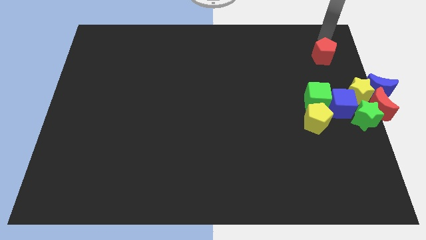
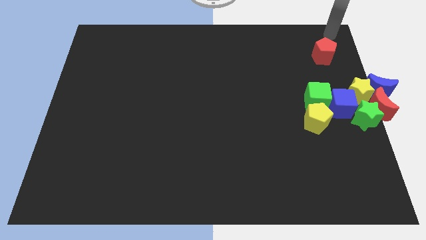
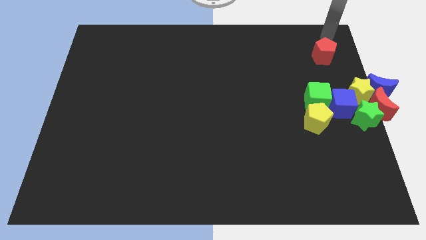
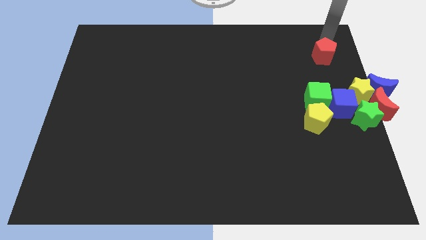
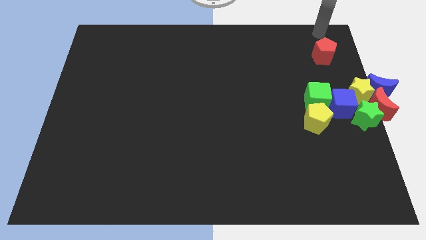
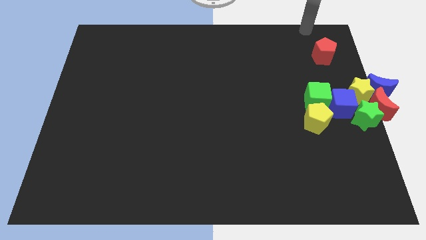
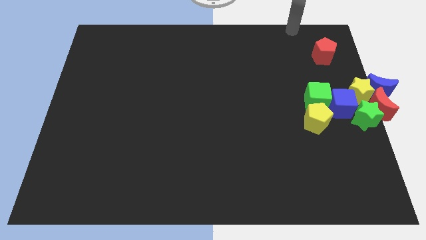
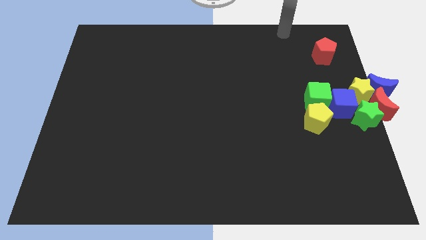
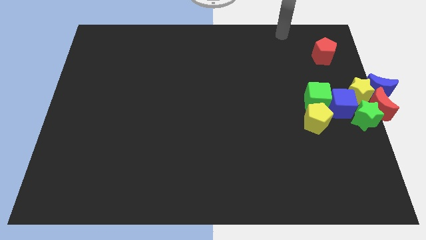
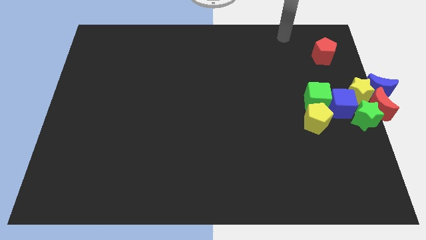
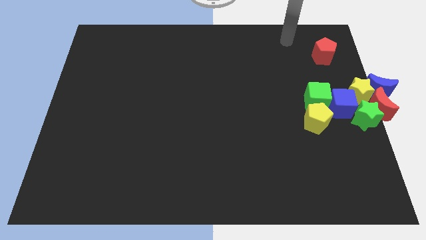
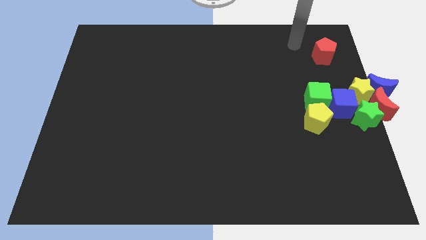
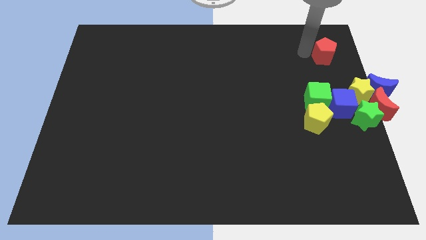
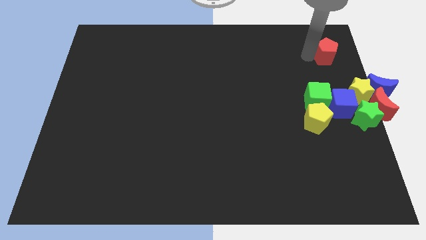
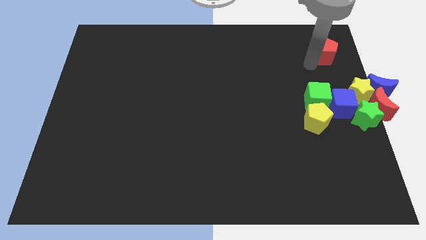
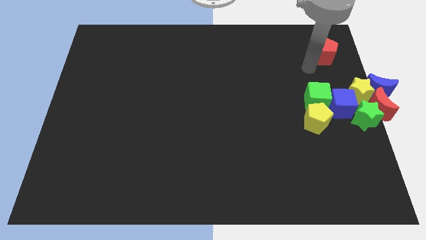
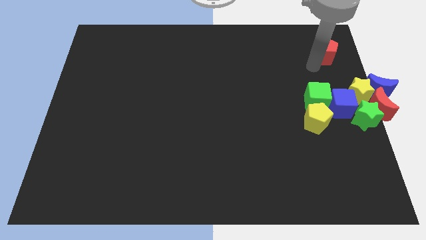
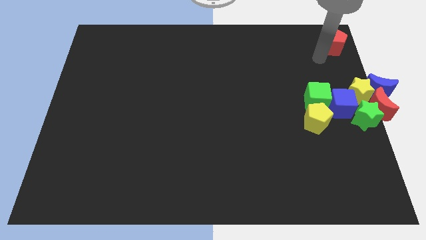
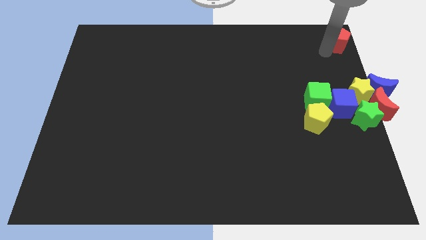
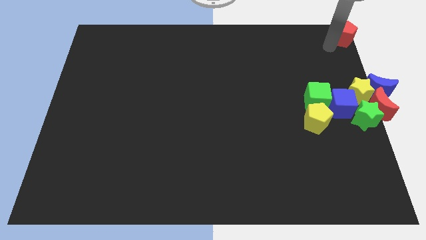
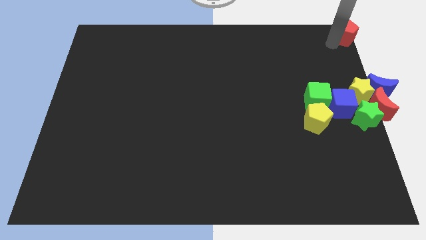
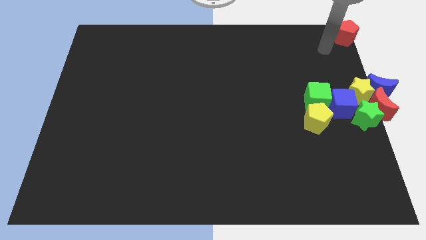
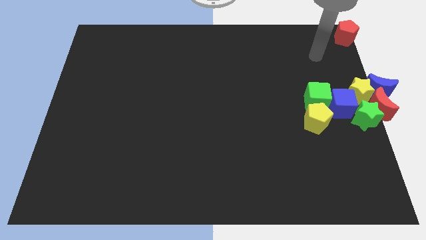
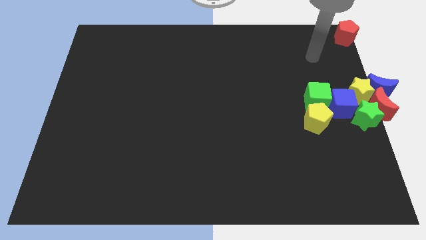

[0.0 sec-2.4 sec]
push the red pentagon to the top right corner

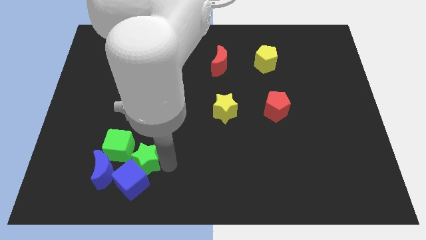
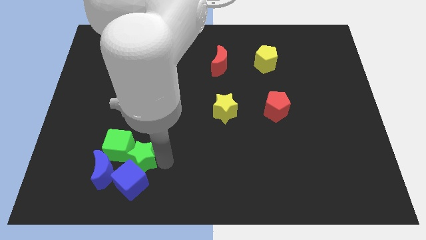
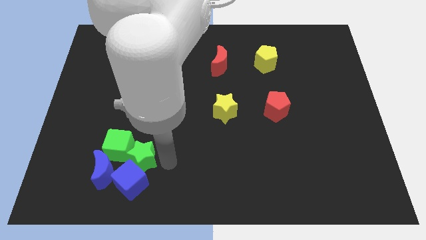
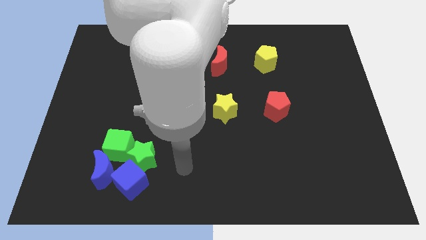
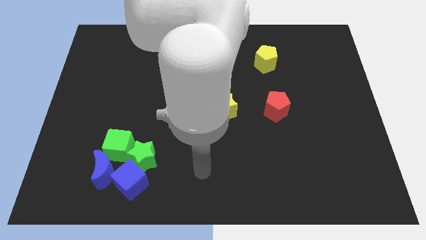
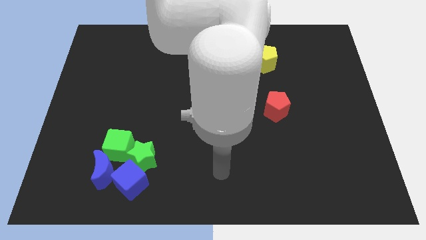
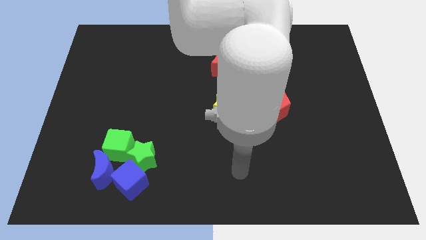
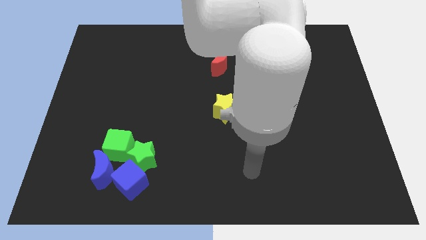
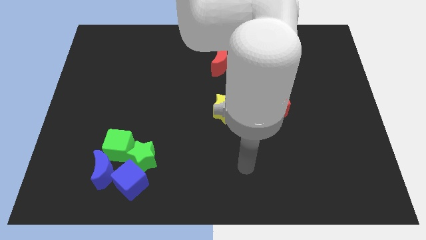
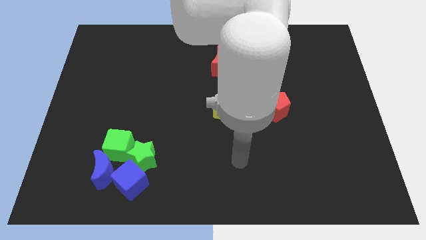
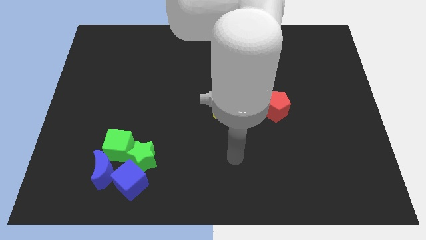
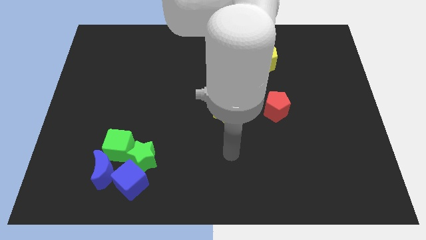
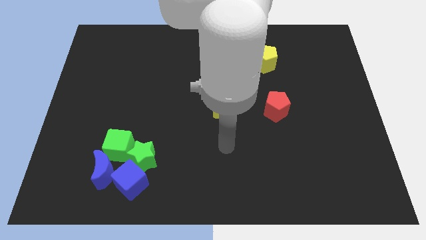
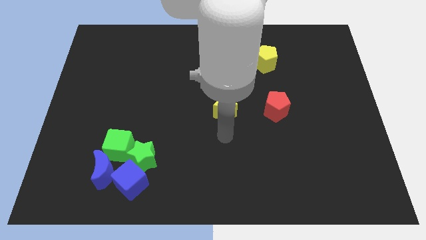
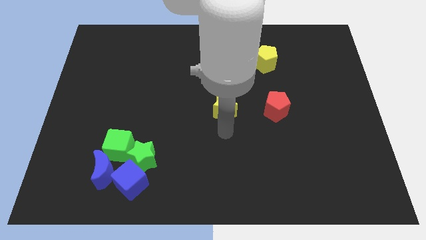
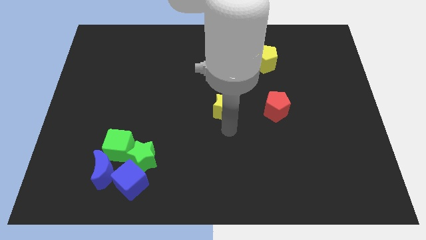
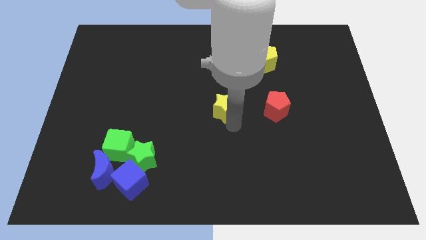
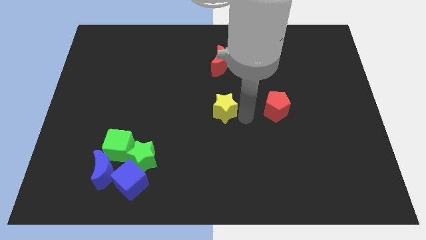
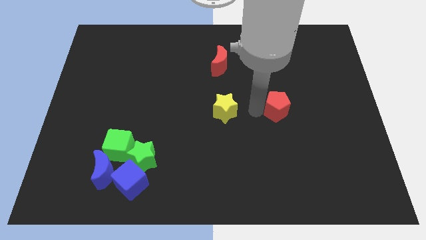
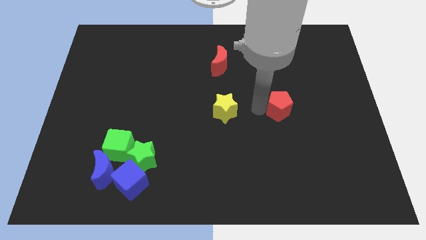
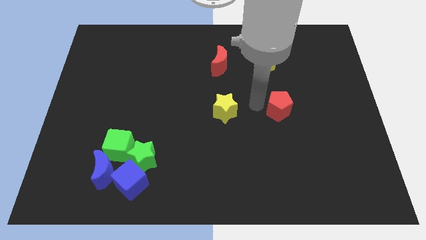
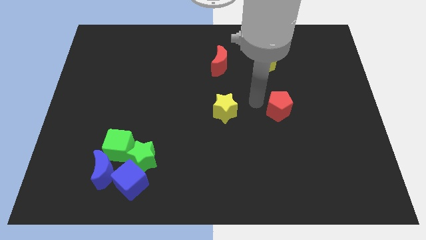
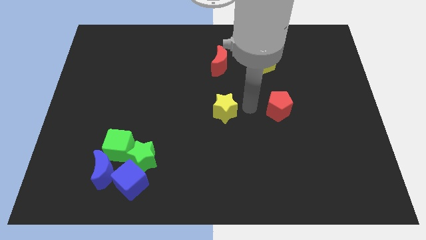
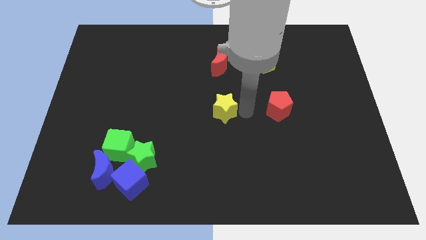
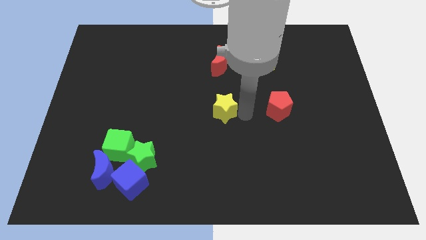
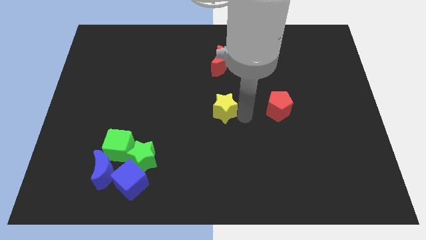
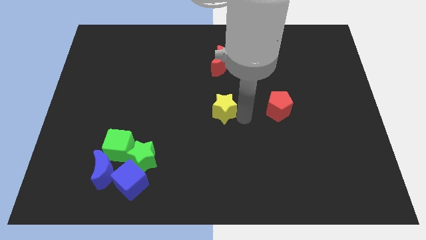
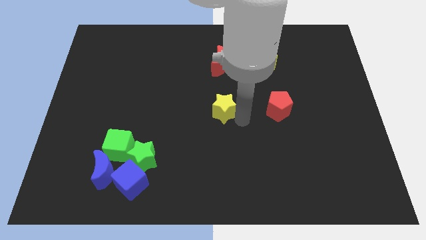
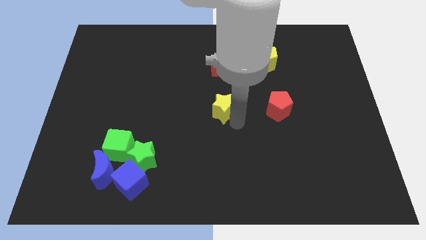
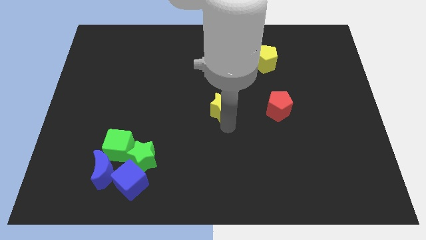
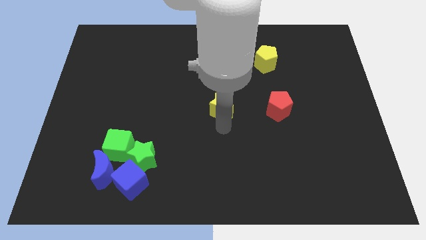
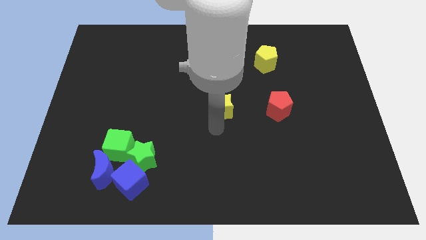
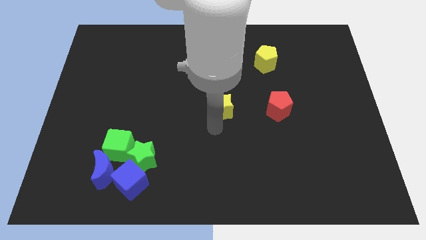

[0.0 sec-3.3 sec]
make your move from green star to yellow star

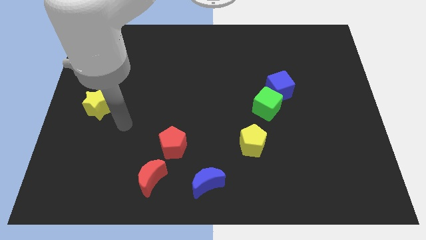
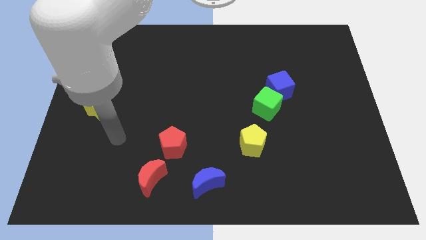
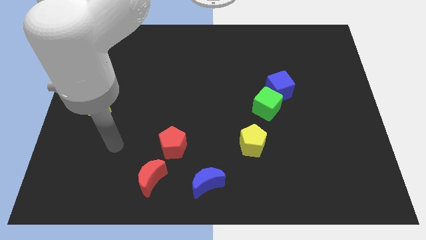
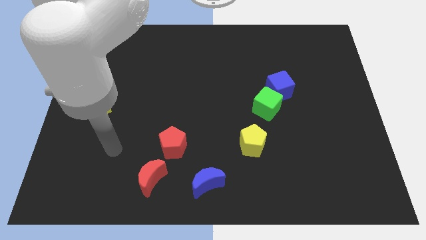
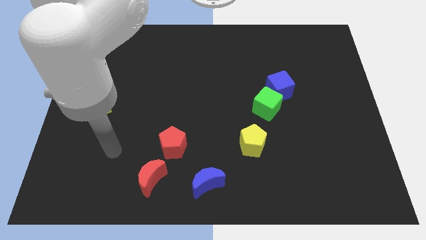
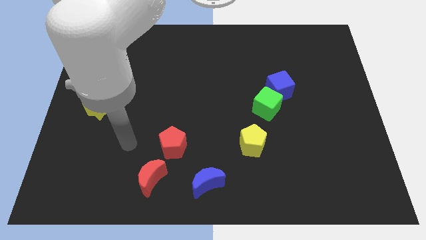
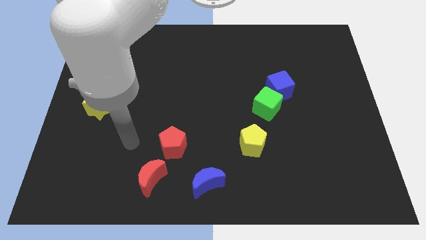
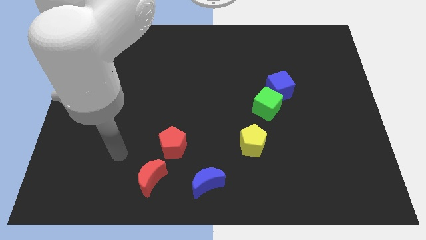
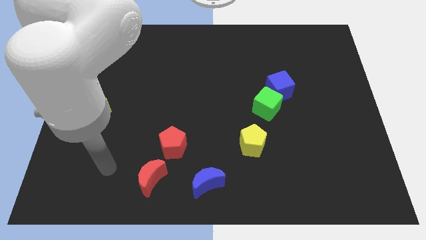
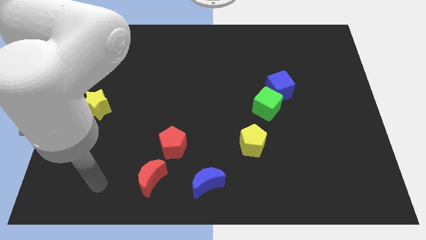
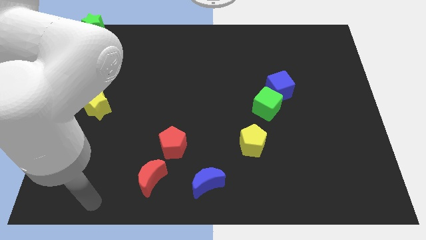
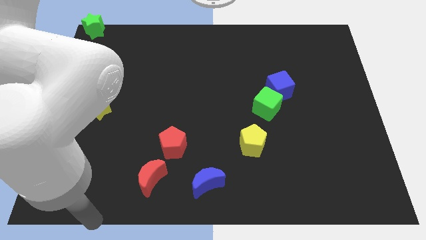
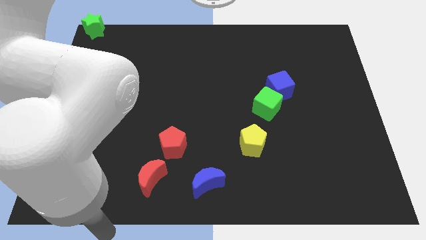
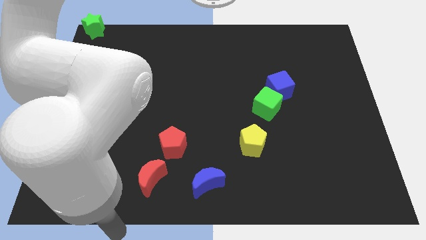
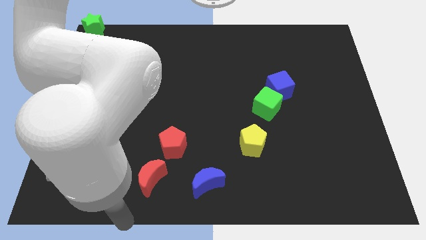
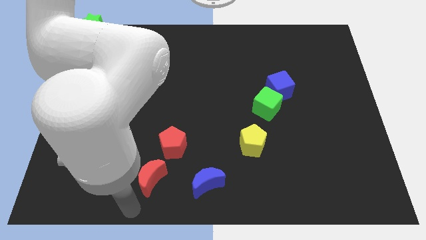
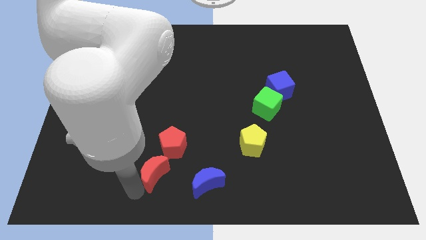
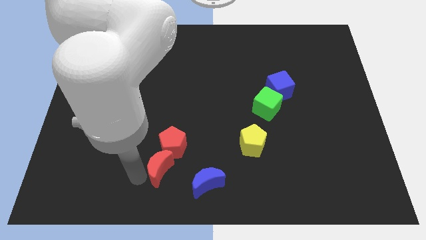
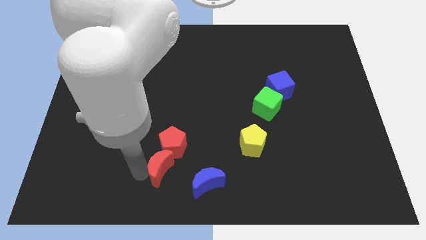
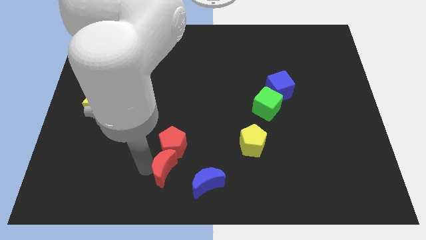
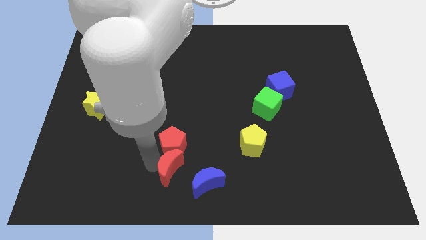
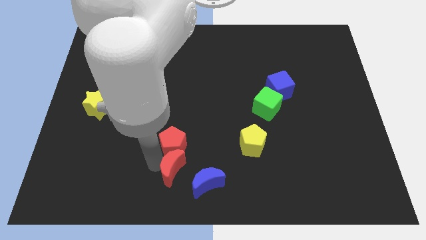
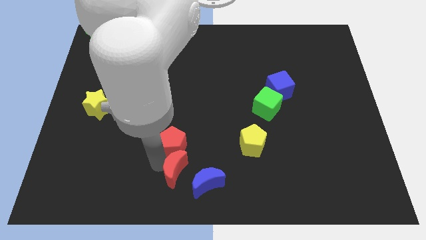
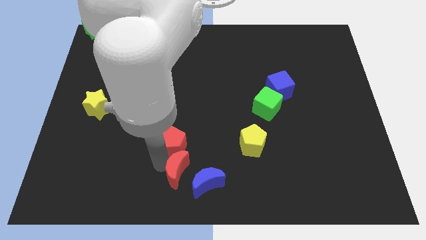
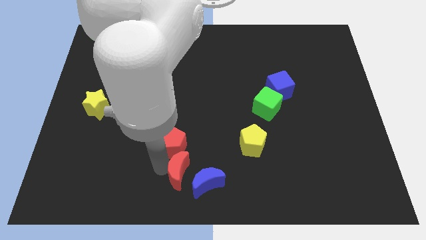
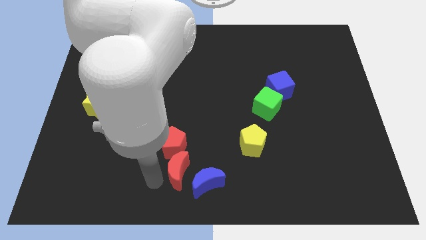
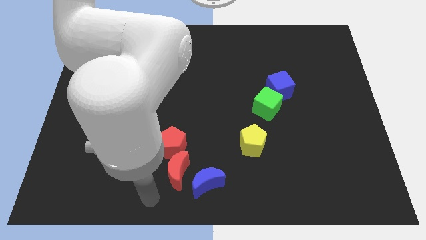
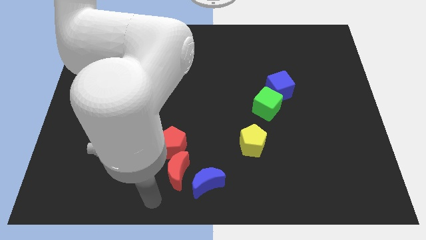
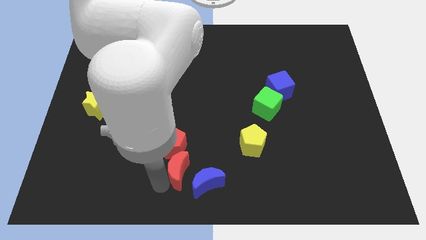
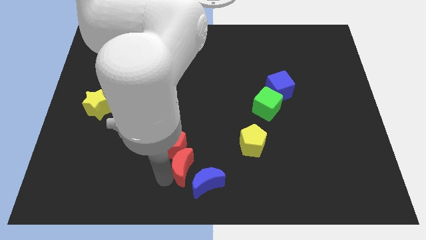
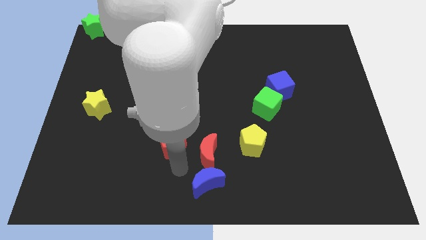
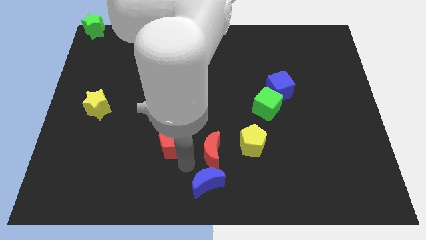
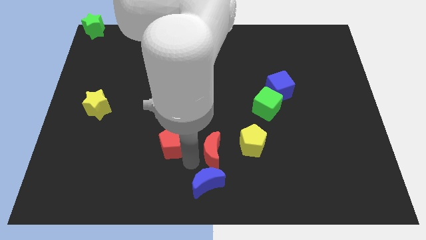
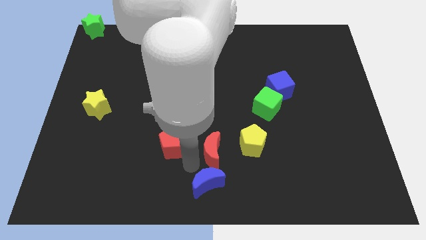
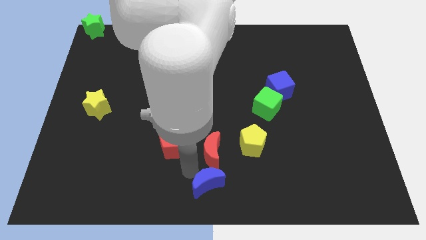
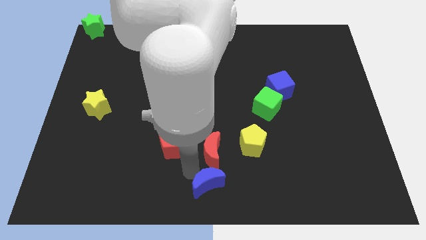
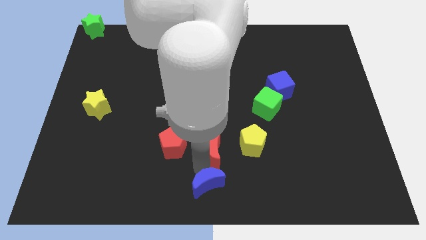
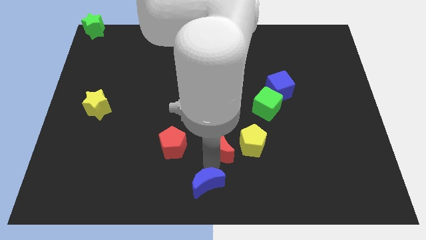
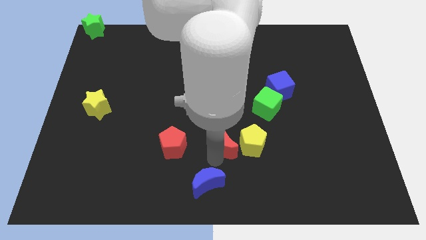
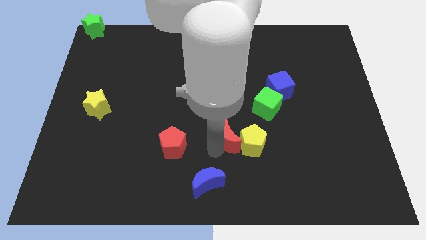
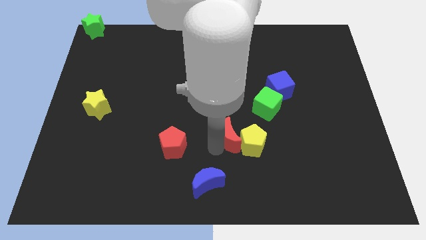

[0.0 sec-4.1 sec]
push the red moon into the yellow pentagon
